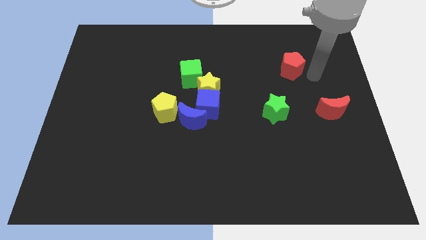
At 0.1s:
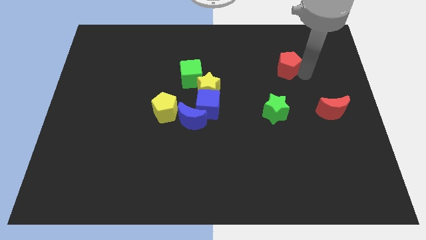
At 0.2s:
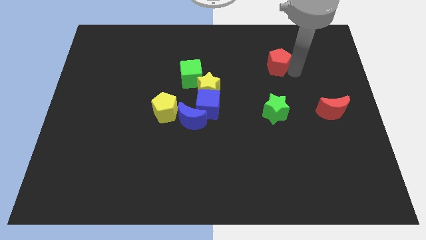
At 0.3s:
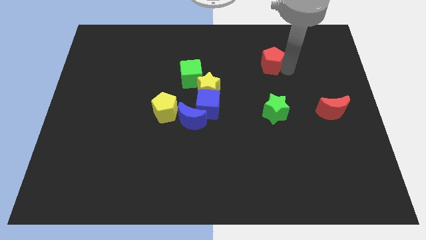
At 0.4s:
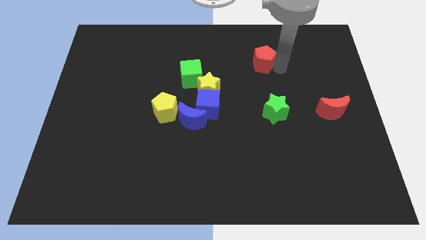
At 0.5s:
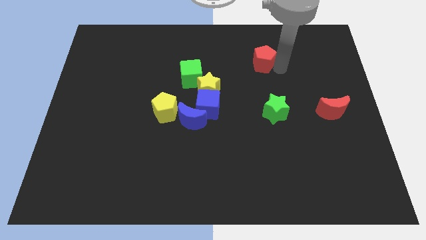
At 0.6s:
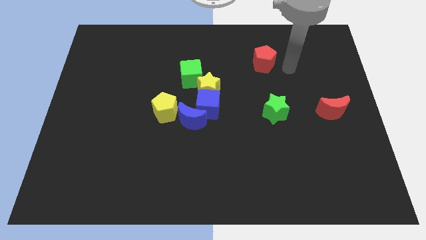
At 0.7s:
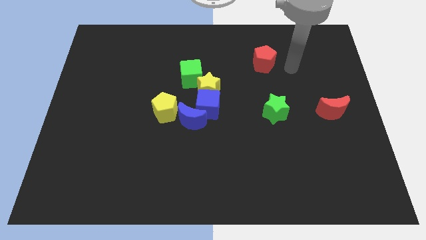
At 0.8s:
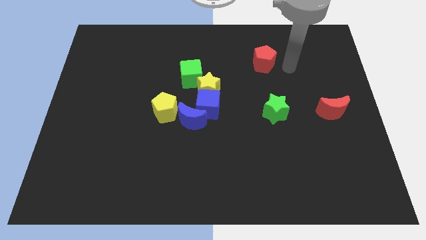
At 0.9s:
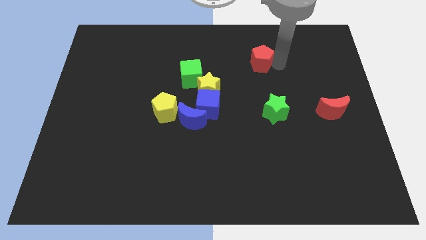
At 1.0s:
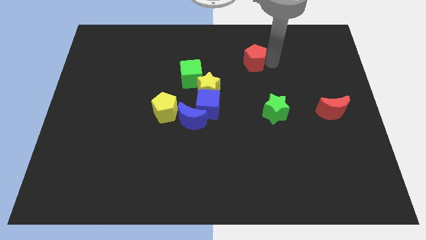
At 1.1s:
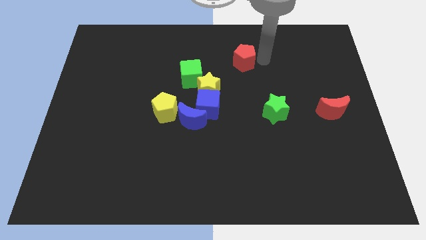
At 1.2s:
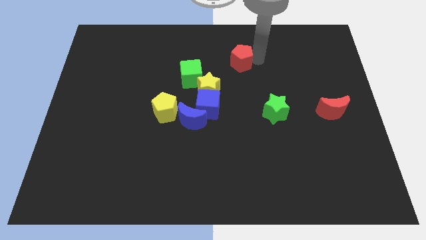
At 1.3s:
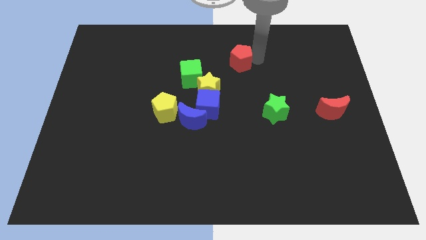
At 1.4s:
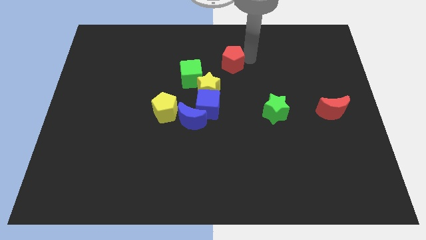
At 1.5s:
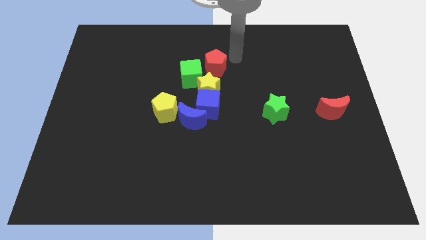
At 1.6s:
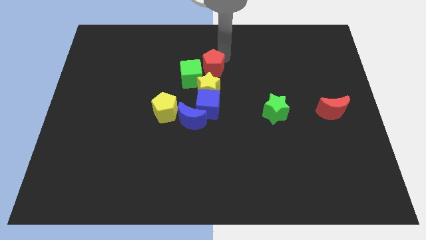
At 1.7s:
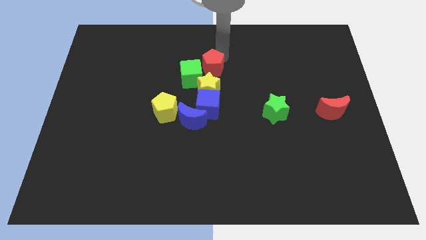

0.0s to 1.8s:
move the red pentagon towards the center

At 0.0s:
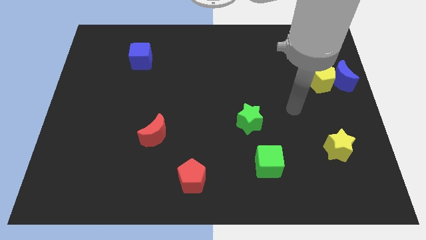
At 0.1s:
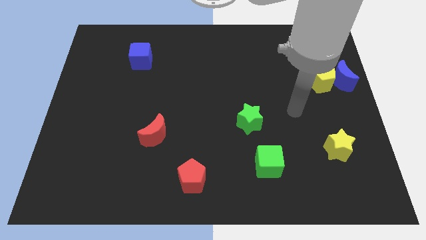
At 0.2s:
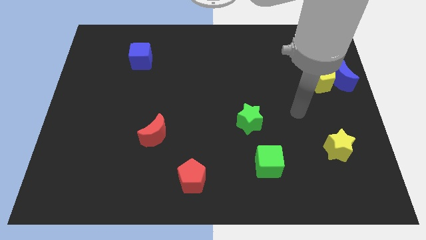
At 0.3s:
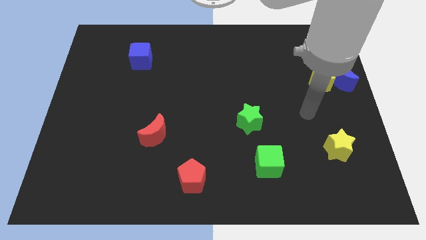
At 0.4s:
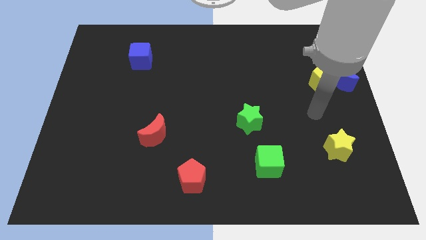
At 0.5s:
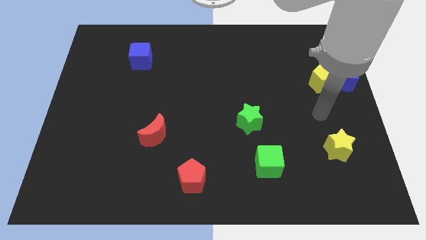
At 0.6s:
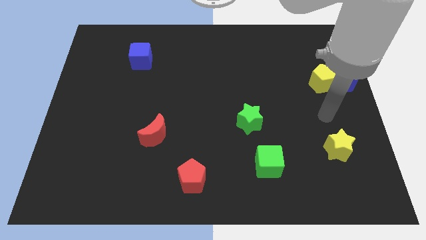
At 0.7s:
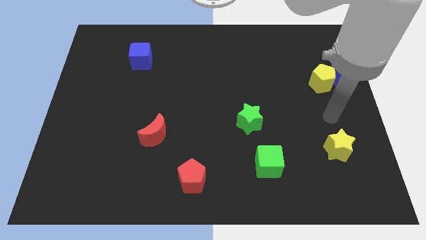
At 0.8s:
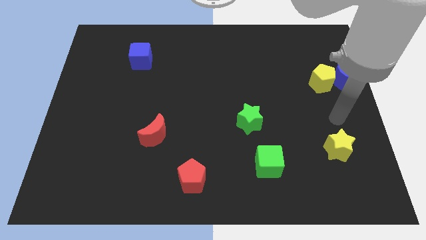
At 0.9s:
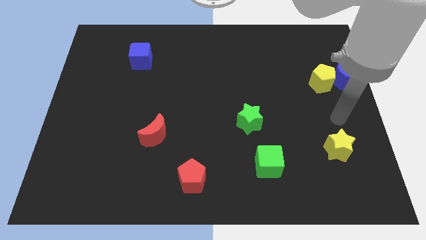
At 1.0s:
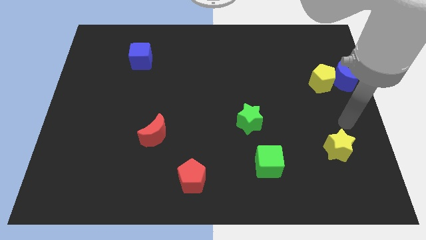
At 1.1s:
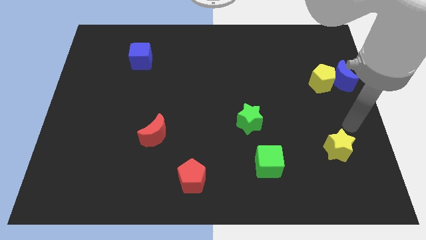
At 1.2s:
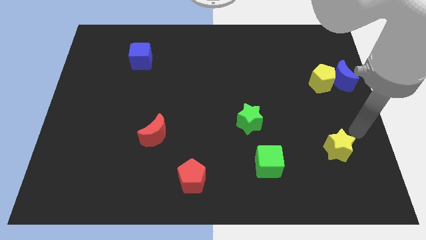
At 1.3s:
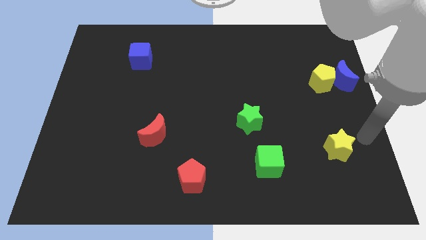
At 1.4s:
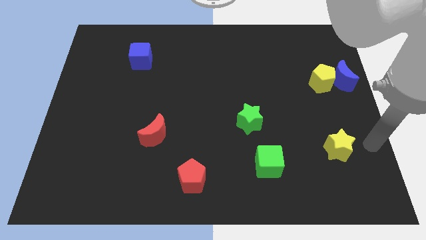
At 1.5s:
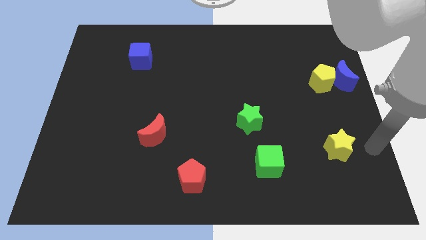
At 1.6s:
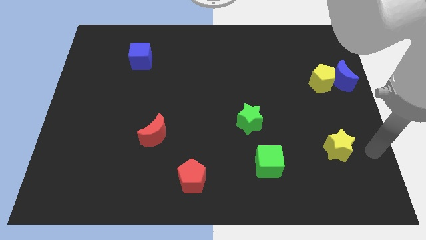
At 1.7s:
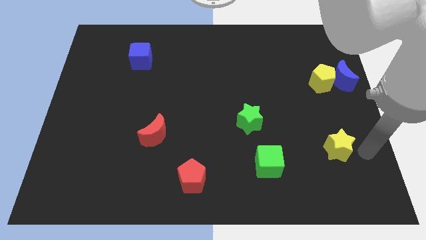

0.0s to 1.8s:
move yourself away from the yellow pentagon

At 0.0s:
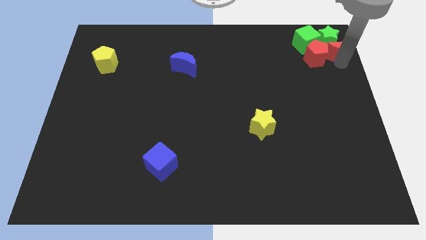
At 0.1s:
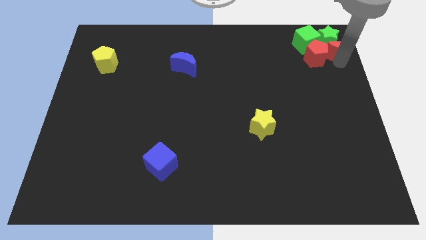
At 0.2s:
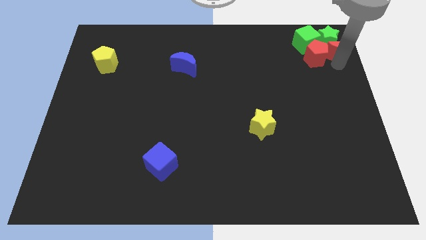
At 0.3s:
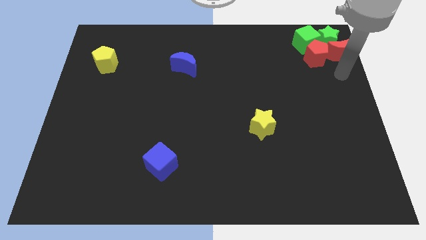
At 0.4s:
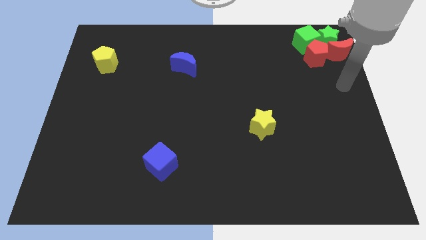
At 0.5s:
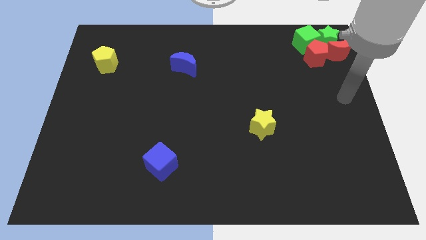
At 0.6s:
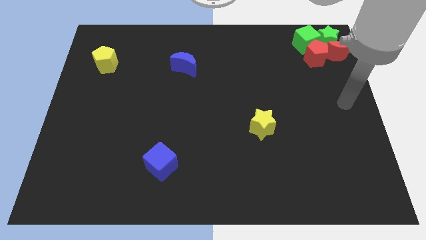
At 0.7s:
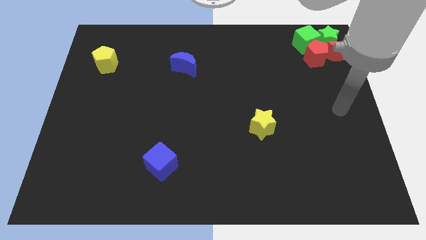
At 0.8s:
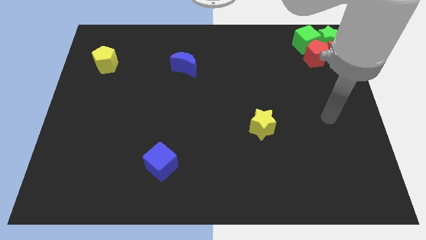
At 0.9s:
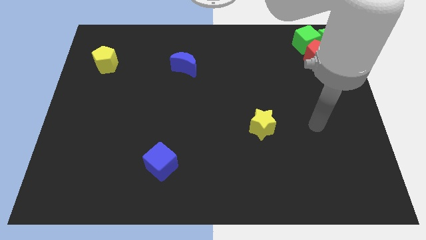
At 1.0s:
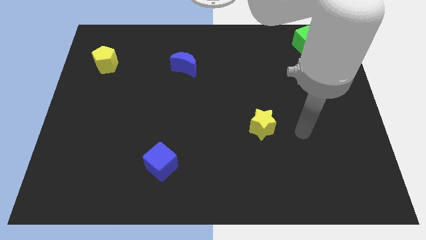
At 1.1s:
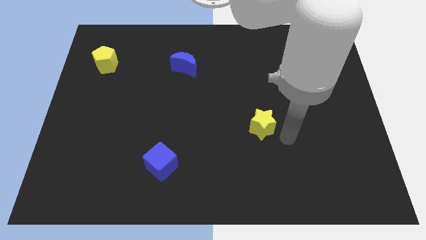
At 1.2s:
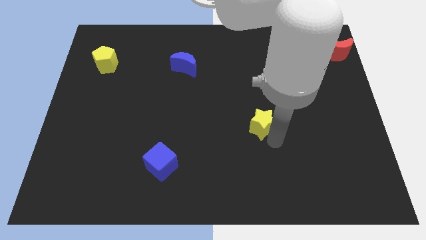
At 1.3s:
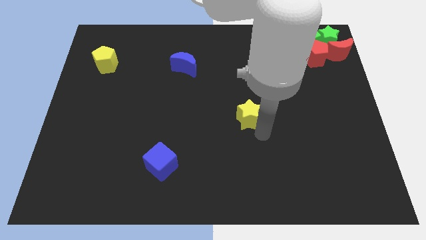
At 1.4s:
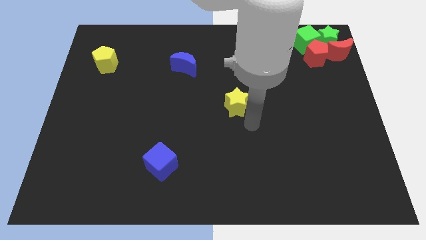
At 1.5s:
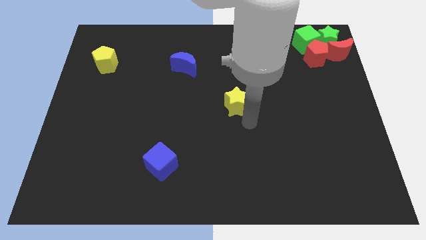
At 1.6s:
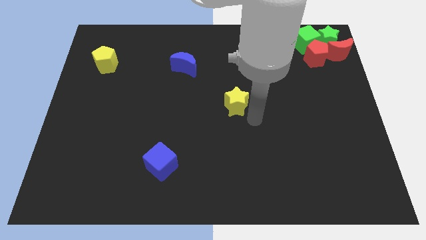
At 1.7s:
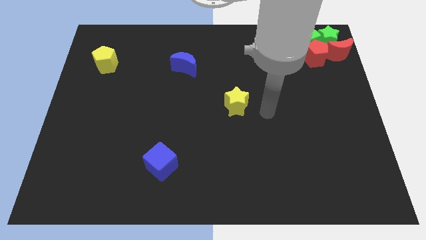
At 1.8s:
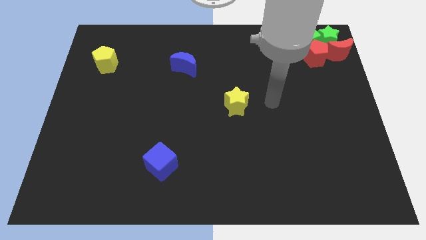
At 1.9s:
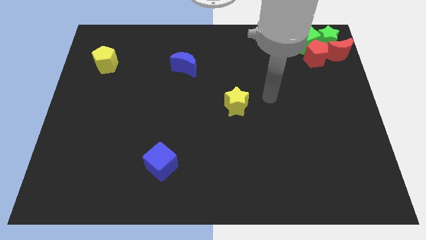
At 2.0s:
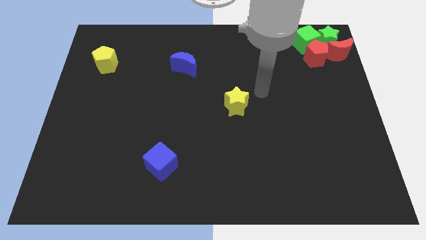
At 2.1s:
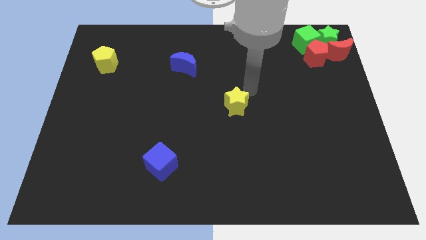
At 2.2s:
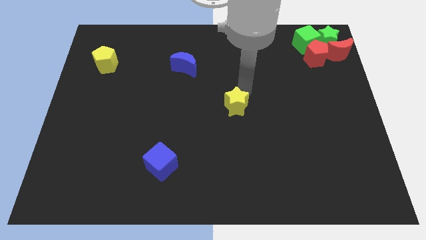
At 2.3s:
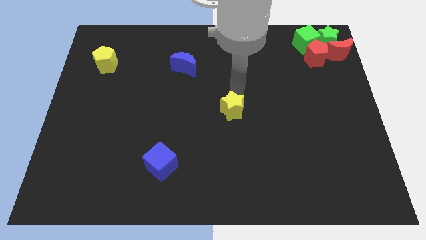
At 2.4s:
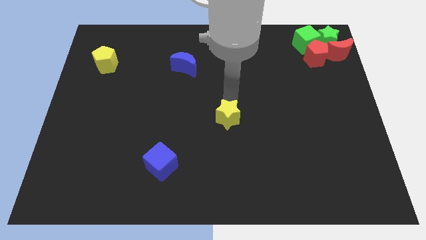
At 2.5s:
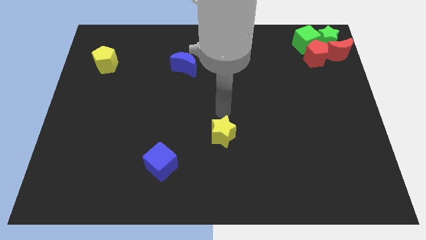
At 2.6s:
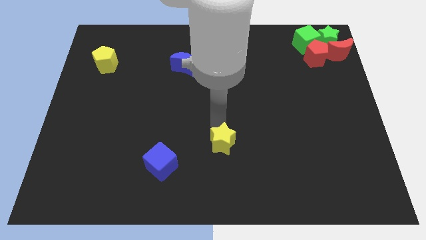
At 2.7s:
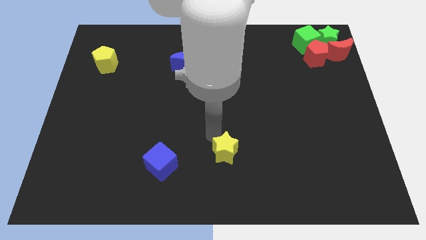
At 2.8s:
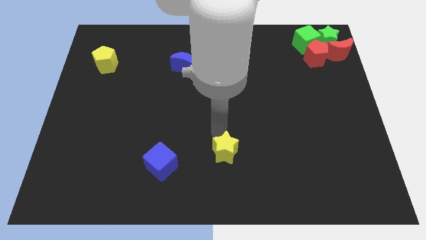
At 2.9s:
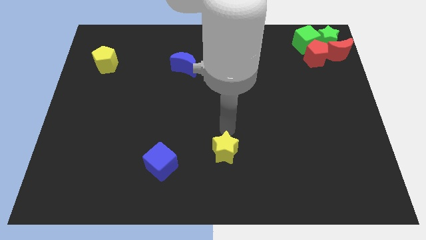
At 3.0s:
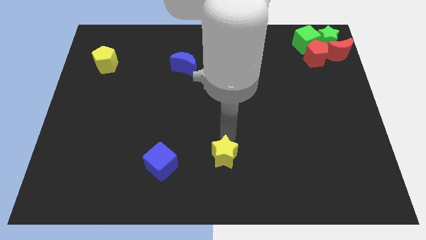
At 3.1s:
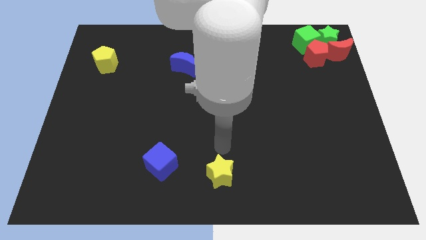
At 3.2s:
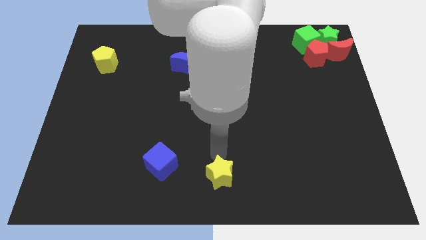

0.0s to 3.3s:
place the yellow star right to the blue cube

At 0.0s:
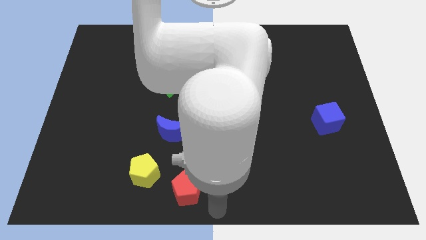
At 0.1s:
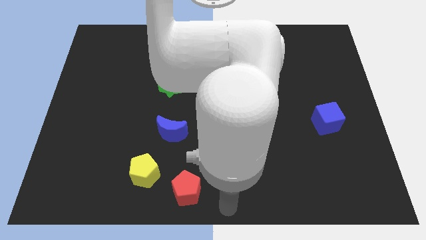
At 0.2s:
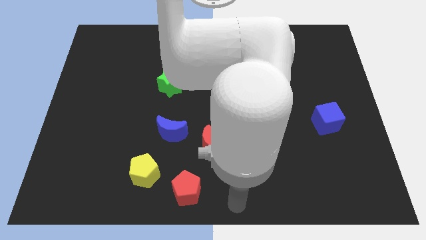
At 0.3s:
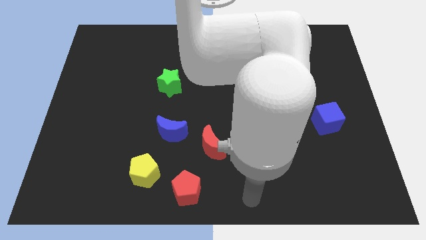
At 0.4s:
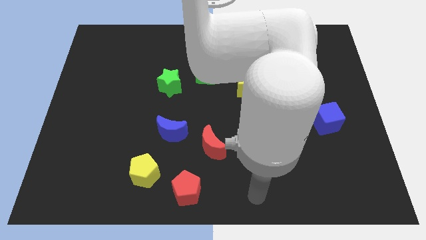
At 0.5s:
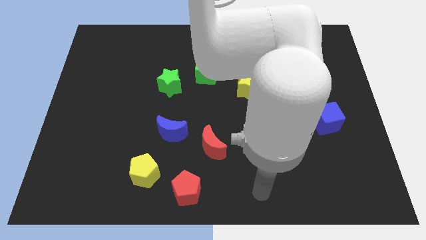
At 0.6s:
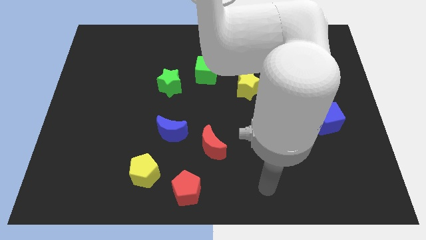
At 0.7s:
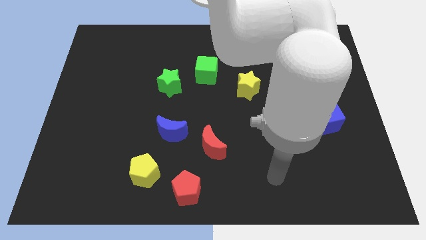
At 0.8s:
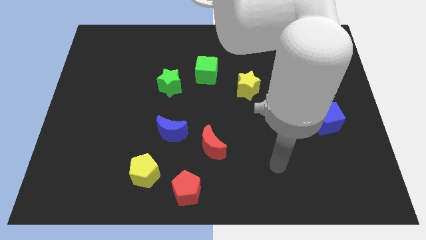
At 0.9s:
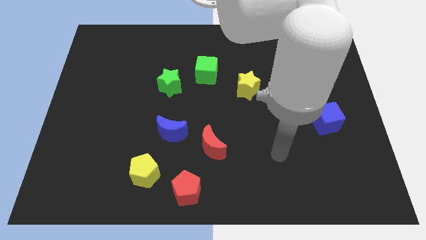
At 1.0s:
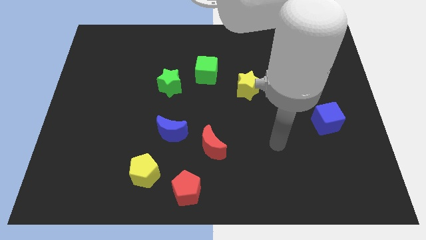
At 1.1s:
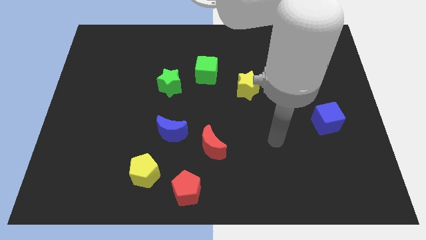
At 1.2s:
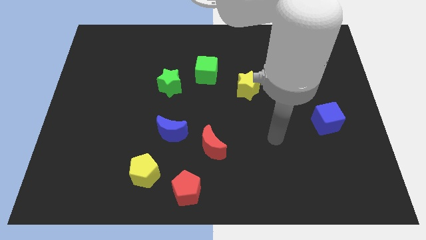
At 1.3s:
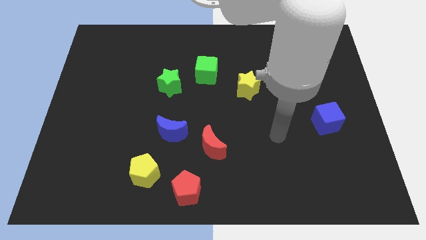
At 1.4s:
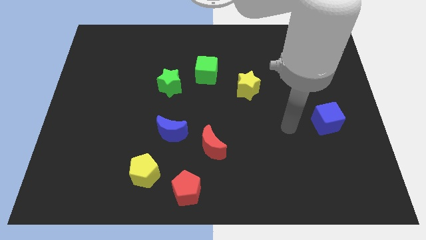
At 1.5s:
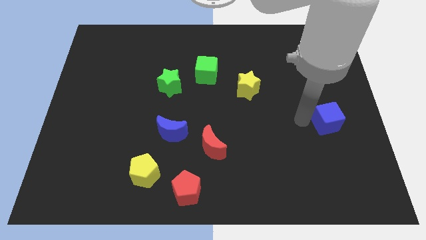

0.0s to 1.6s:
move your arm to the left of the blue cube

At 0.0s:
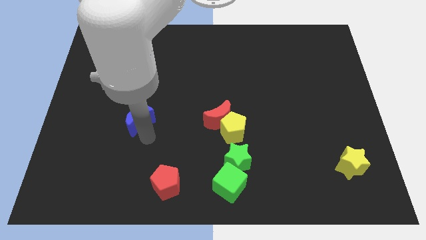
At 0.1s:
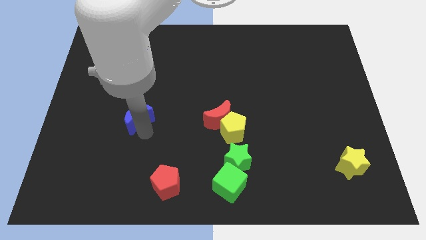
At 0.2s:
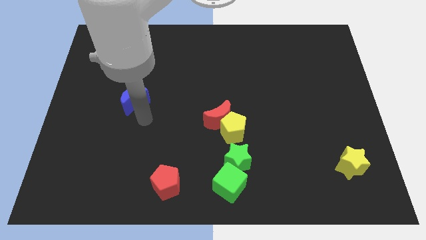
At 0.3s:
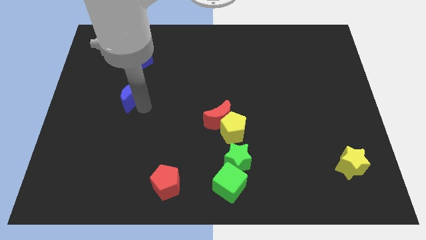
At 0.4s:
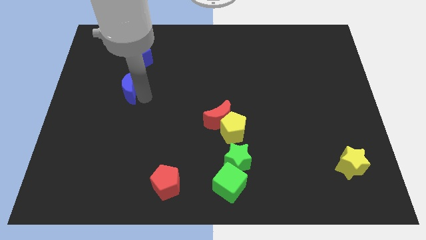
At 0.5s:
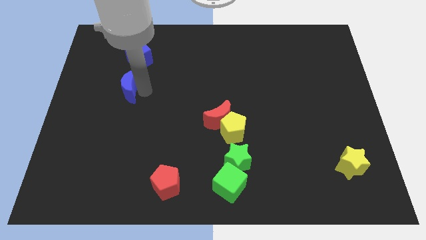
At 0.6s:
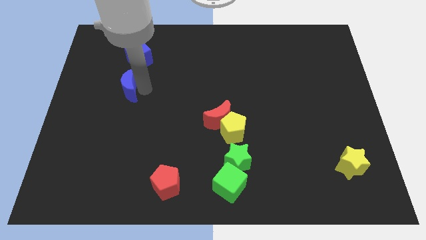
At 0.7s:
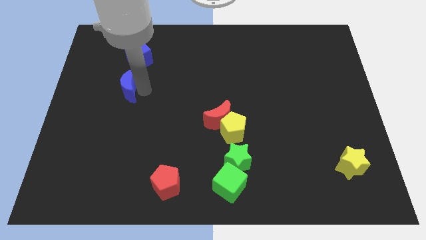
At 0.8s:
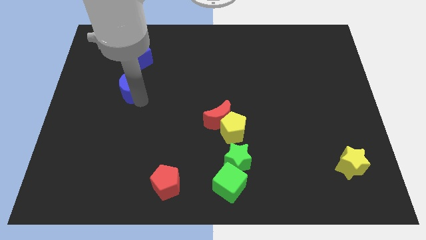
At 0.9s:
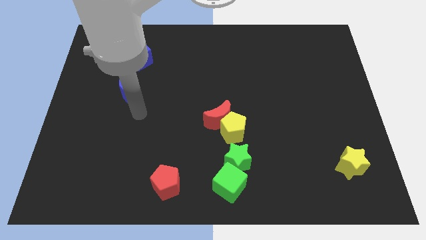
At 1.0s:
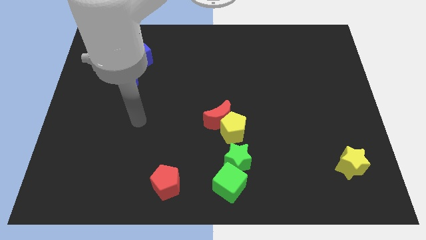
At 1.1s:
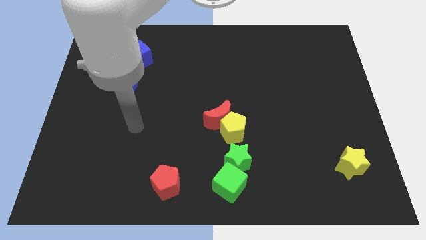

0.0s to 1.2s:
push the blue crescent towards the blue cube
